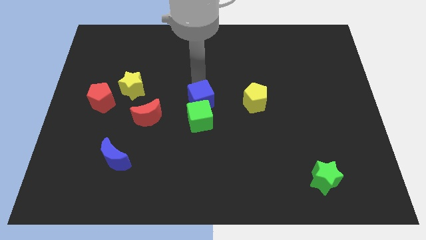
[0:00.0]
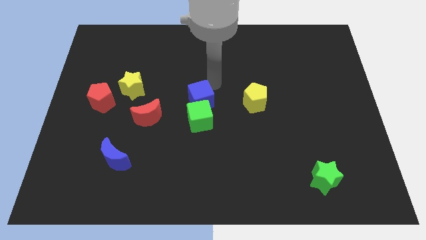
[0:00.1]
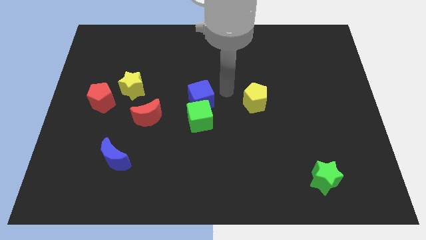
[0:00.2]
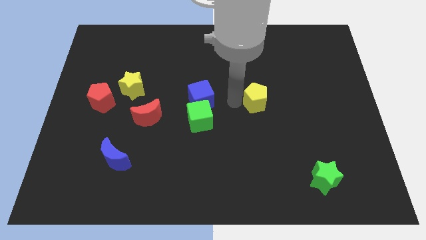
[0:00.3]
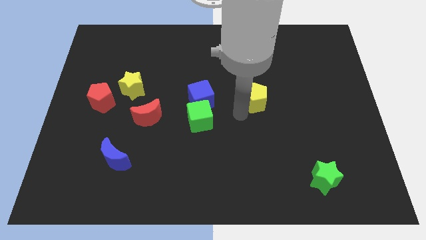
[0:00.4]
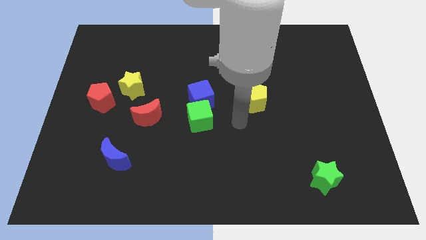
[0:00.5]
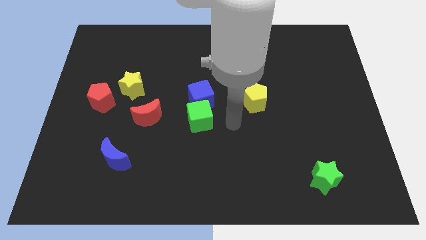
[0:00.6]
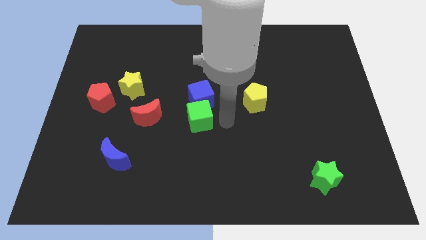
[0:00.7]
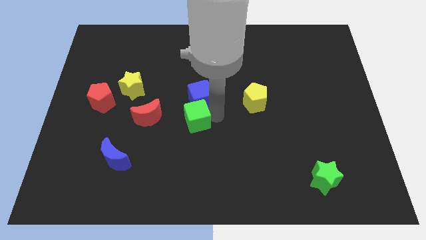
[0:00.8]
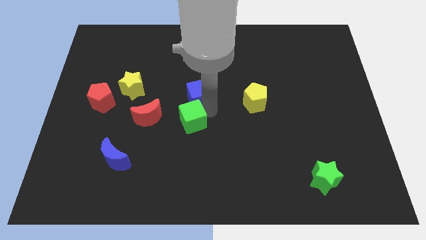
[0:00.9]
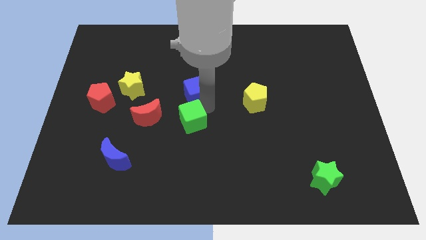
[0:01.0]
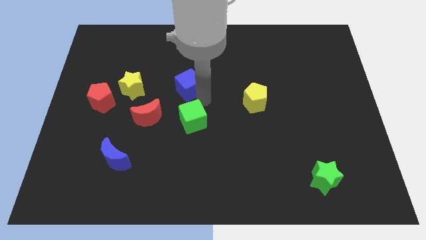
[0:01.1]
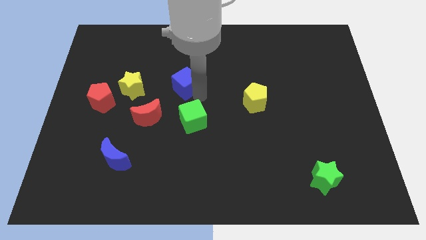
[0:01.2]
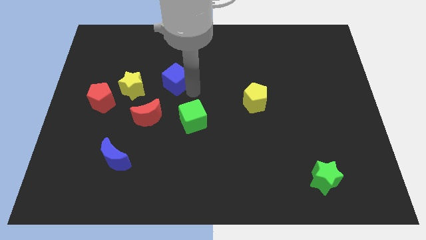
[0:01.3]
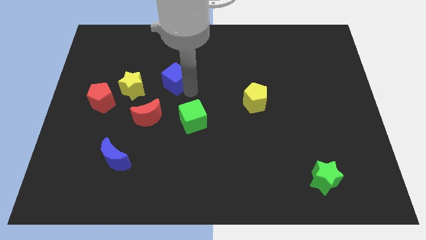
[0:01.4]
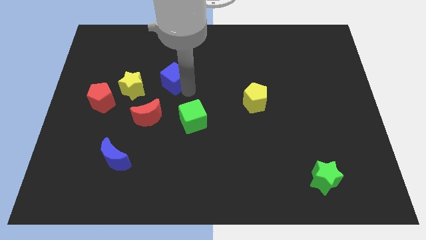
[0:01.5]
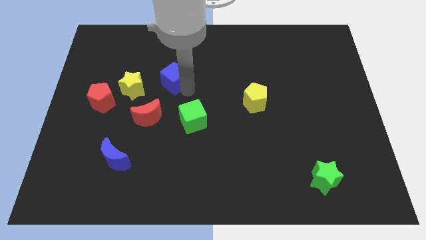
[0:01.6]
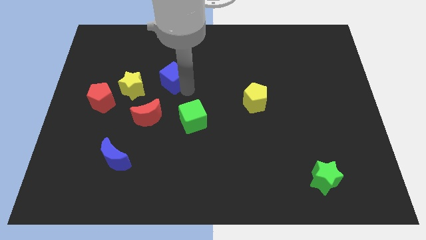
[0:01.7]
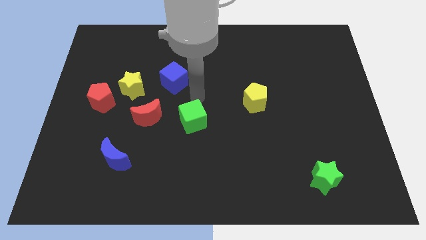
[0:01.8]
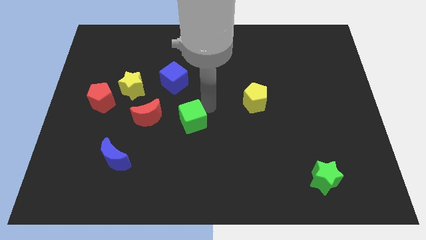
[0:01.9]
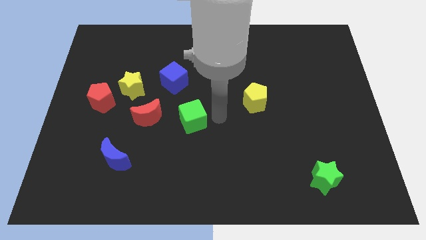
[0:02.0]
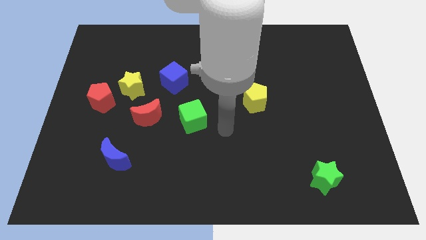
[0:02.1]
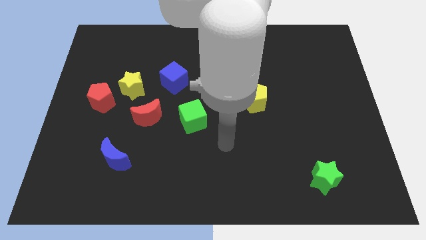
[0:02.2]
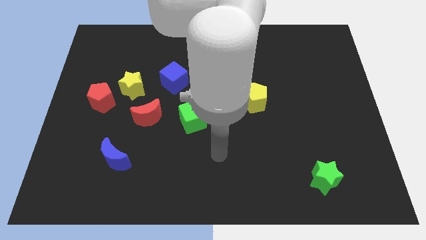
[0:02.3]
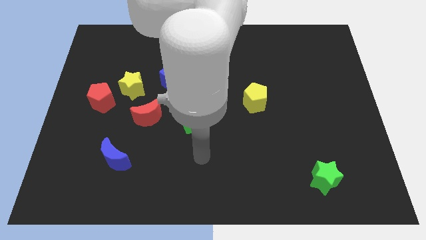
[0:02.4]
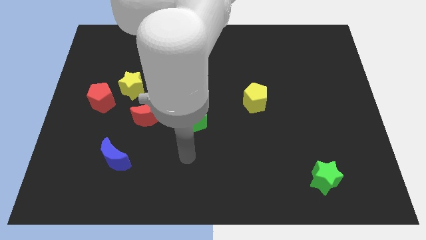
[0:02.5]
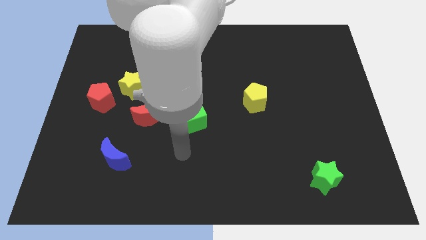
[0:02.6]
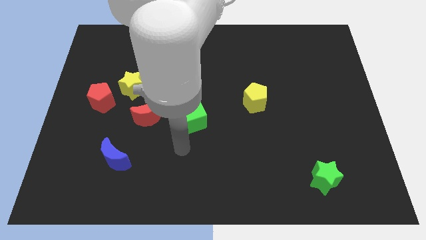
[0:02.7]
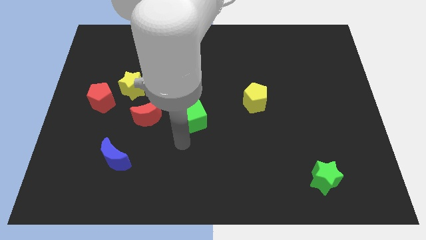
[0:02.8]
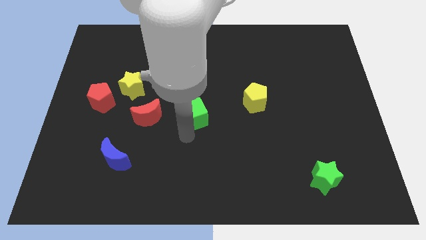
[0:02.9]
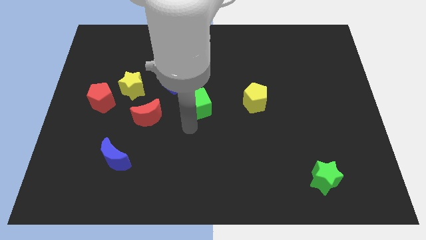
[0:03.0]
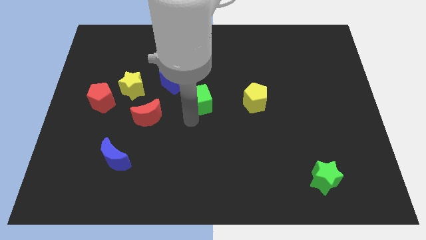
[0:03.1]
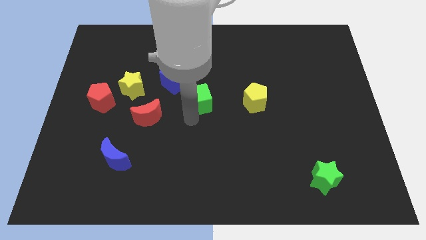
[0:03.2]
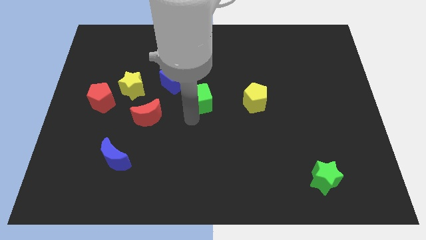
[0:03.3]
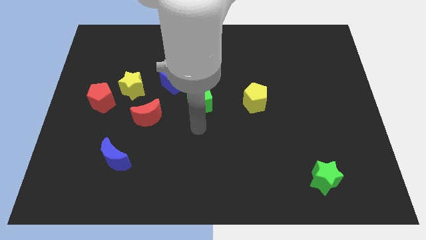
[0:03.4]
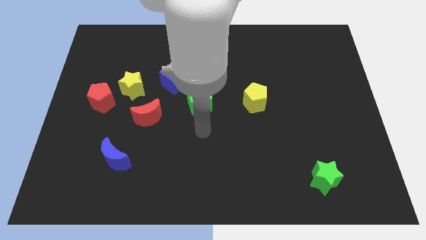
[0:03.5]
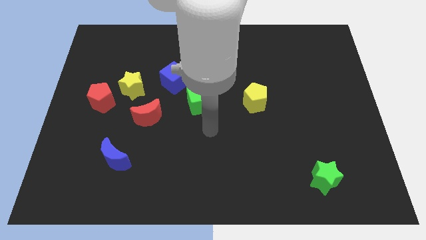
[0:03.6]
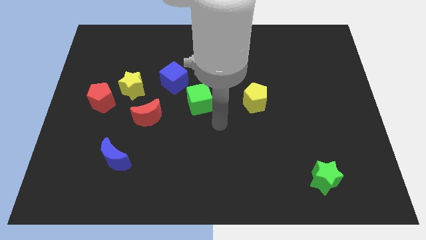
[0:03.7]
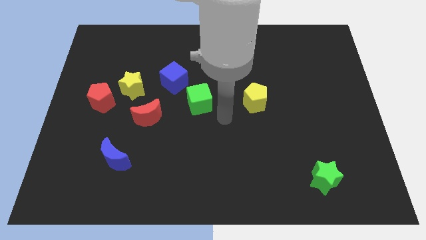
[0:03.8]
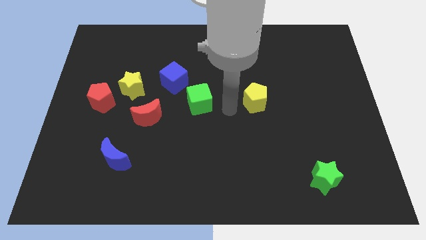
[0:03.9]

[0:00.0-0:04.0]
move green cube to the left of yellow pentagon

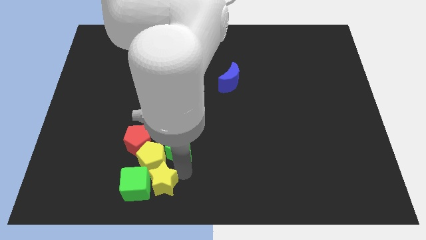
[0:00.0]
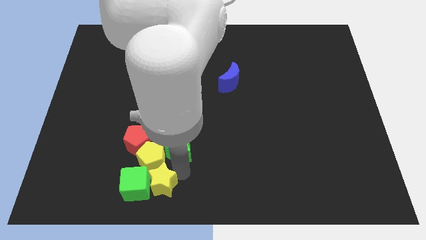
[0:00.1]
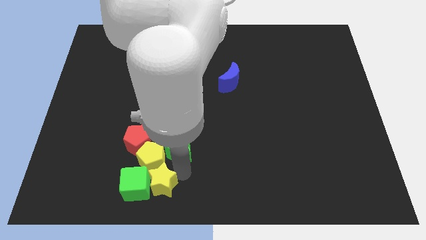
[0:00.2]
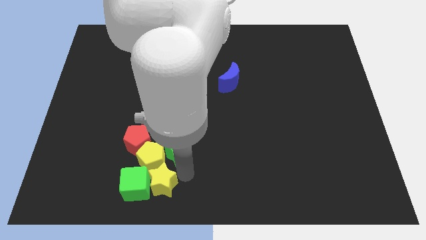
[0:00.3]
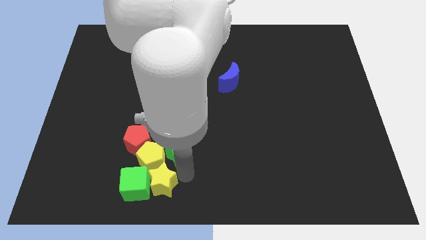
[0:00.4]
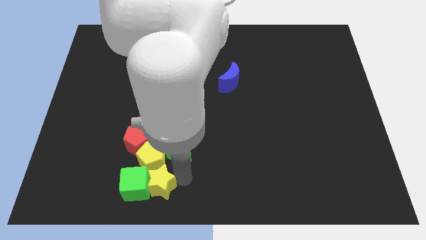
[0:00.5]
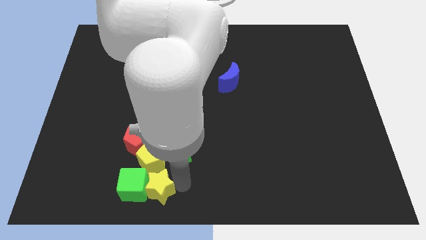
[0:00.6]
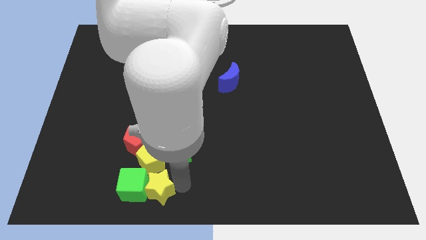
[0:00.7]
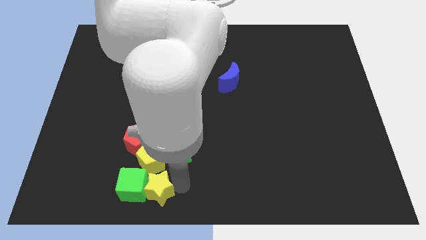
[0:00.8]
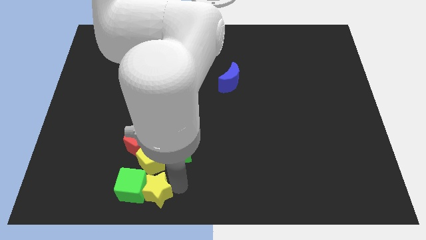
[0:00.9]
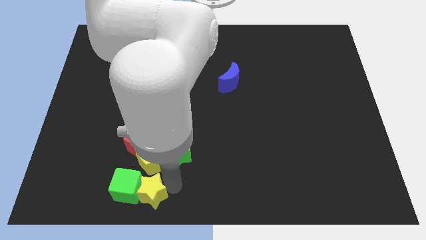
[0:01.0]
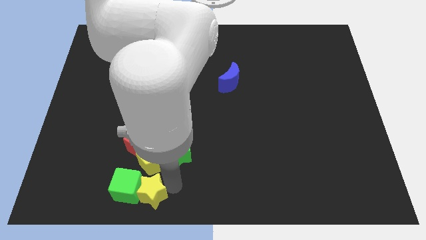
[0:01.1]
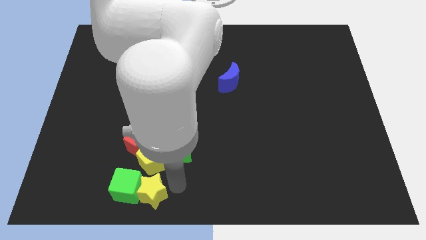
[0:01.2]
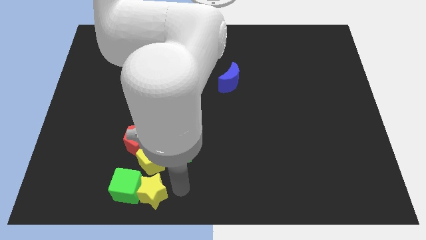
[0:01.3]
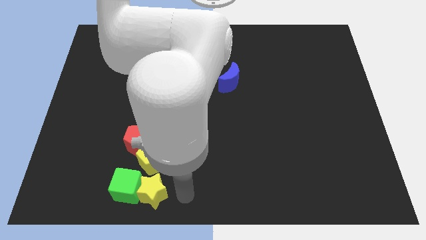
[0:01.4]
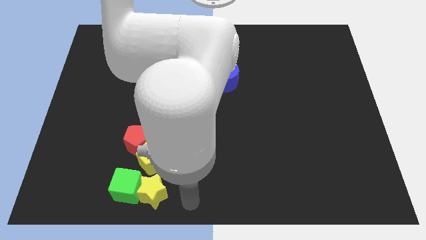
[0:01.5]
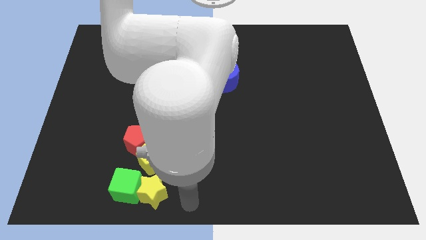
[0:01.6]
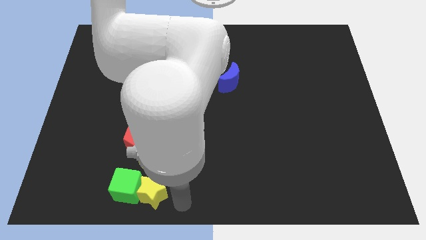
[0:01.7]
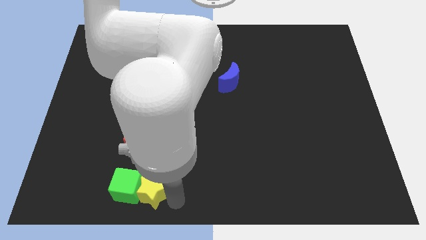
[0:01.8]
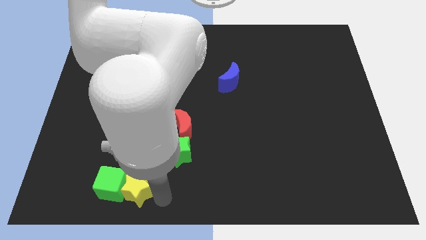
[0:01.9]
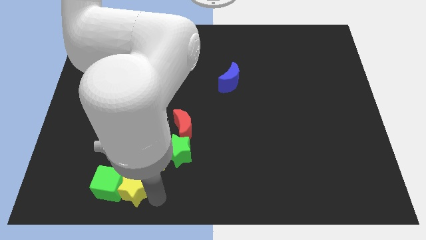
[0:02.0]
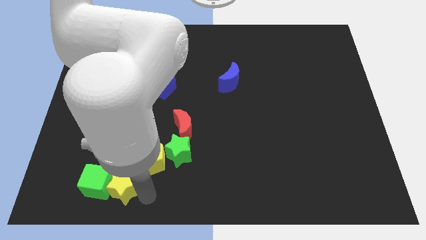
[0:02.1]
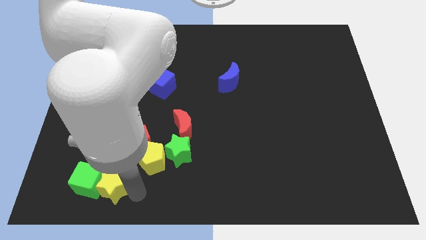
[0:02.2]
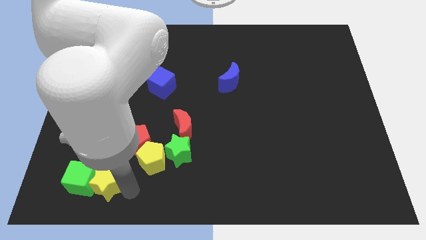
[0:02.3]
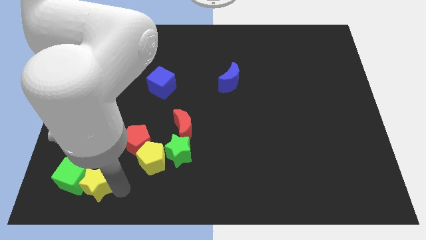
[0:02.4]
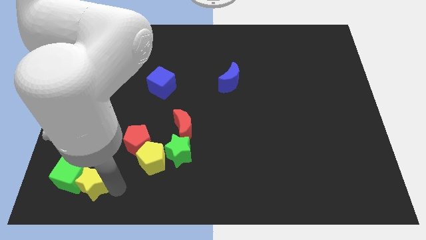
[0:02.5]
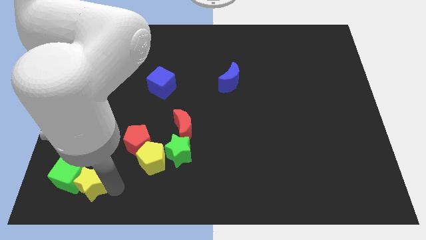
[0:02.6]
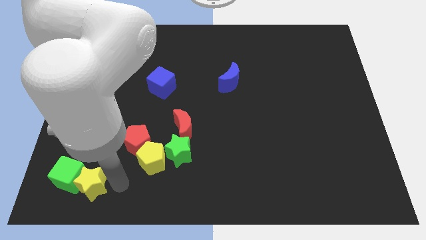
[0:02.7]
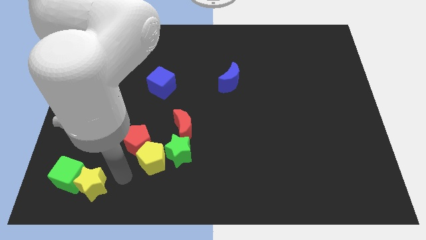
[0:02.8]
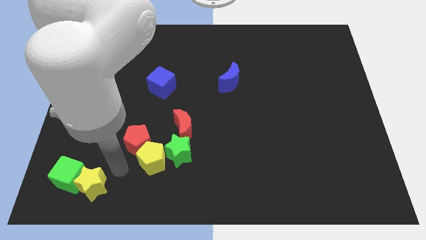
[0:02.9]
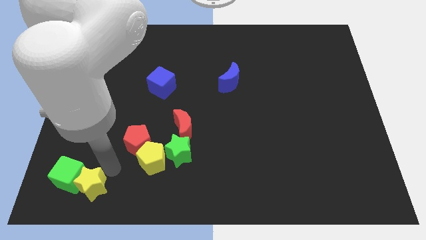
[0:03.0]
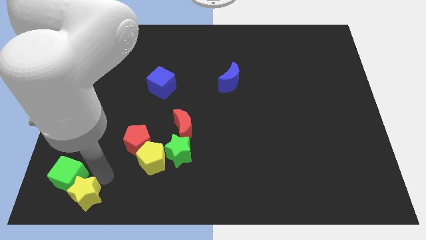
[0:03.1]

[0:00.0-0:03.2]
push yellow star along with green cube towards bottom left

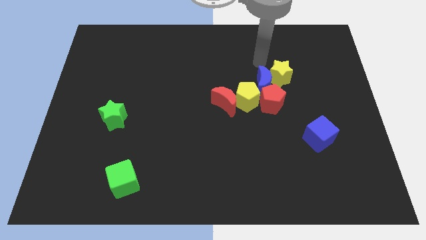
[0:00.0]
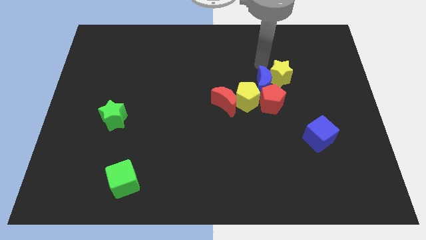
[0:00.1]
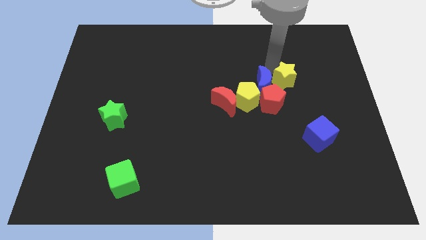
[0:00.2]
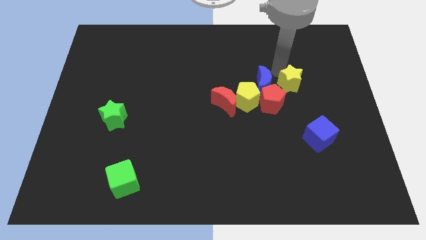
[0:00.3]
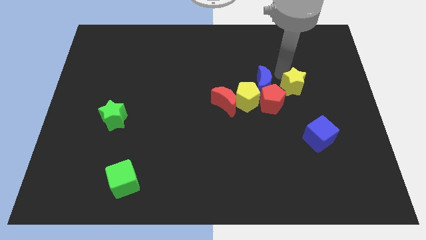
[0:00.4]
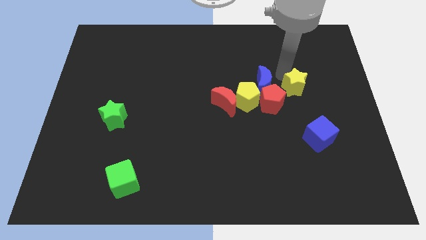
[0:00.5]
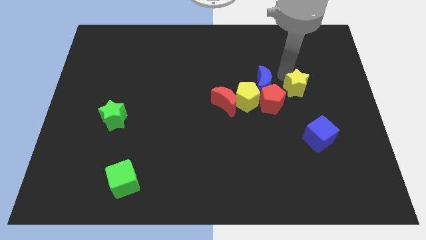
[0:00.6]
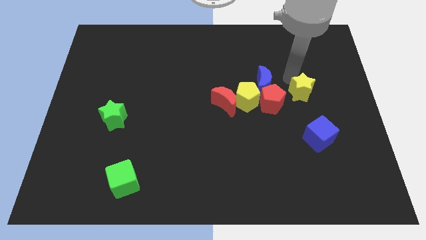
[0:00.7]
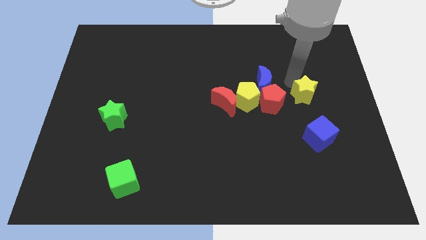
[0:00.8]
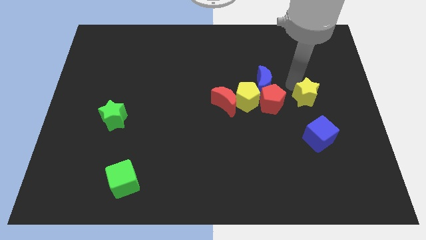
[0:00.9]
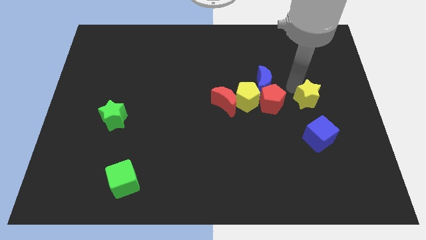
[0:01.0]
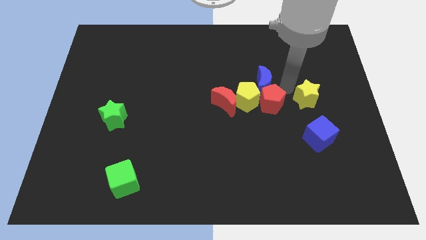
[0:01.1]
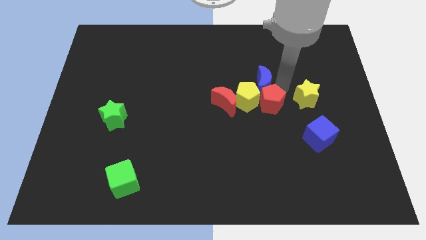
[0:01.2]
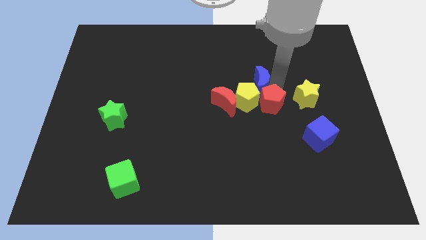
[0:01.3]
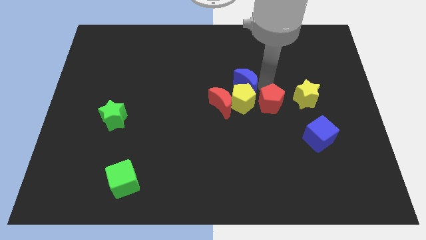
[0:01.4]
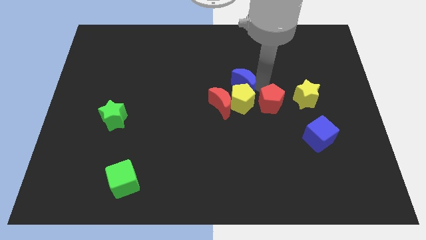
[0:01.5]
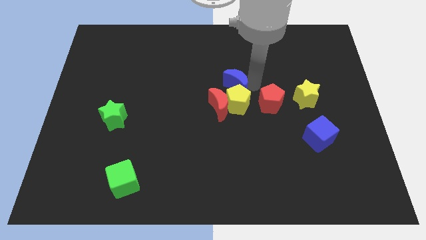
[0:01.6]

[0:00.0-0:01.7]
separate blue moon and yellow star

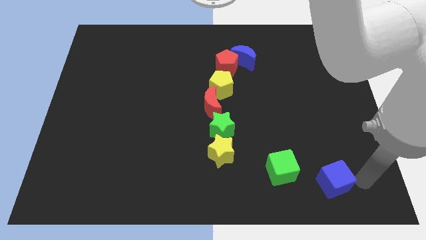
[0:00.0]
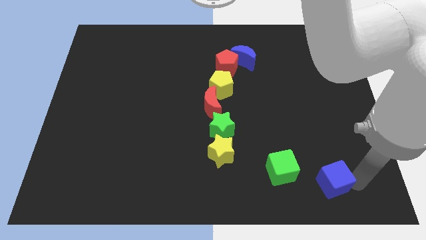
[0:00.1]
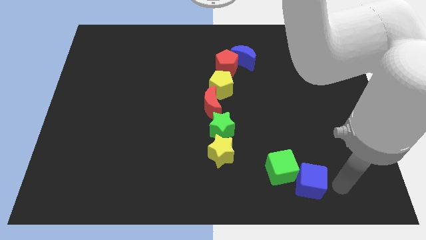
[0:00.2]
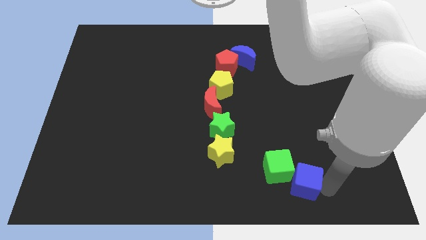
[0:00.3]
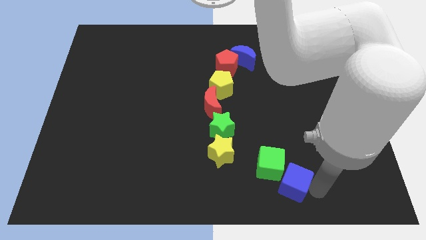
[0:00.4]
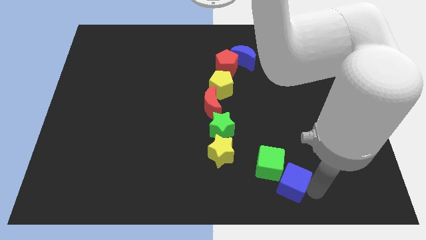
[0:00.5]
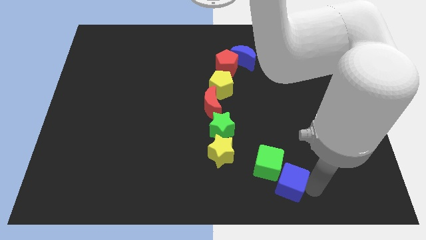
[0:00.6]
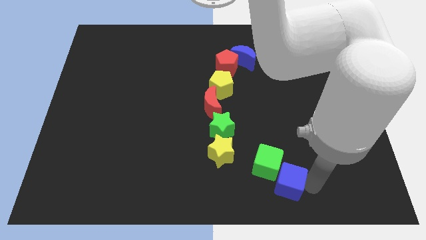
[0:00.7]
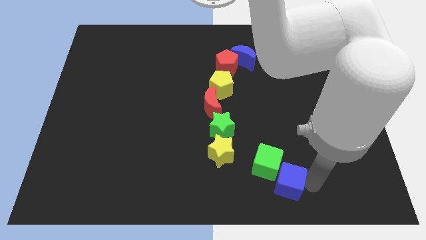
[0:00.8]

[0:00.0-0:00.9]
push blue cube into green cube
